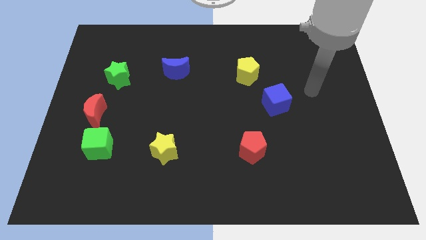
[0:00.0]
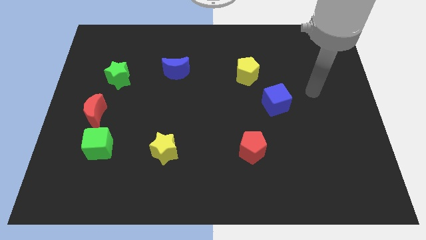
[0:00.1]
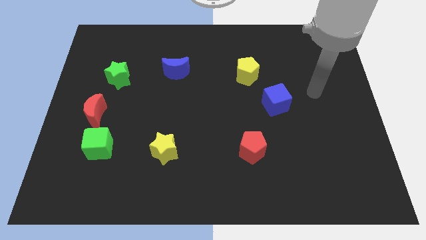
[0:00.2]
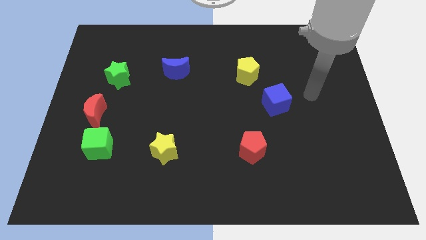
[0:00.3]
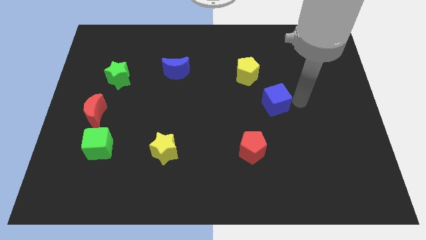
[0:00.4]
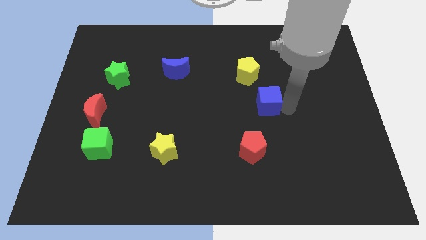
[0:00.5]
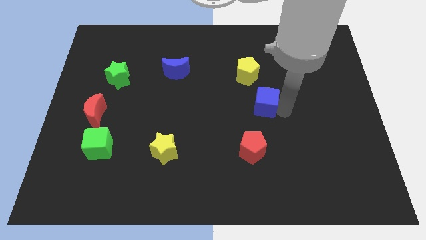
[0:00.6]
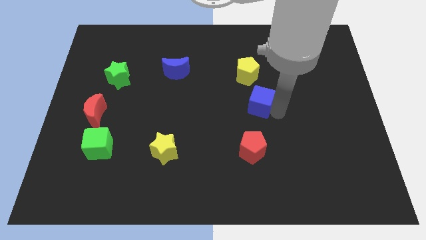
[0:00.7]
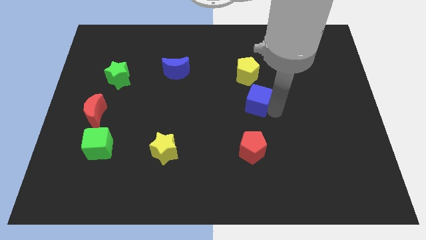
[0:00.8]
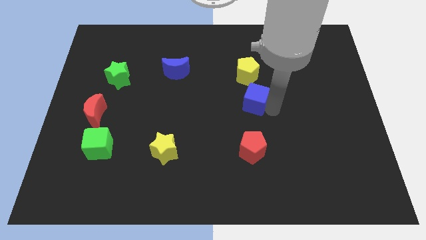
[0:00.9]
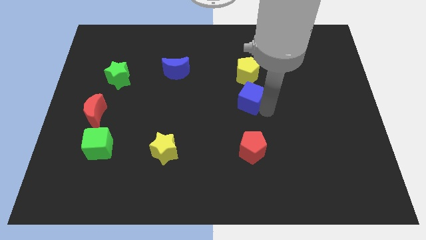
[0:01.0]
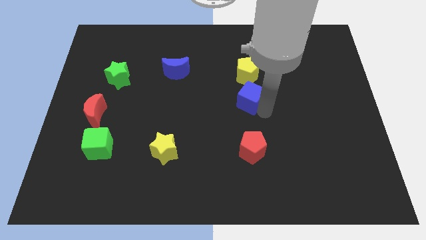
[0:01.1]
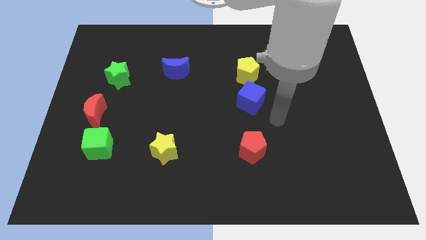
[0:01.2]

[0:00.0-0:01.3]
push blue cube to the bottom of the yellow pentagon

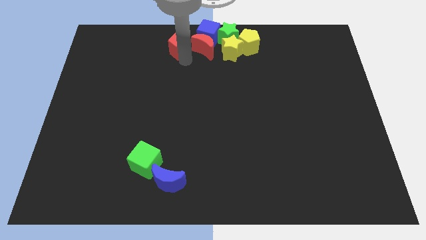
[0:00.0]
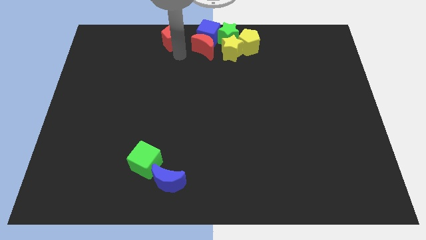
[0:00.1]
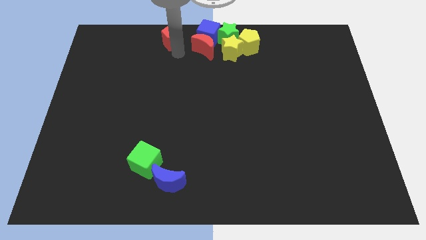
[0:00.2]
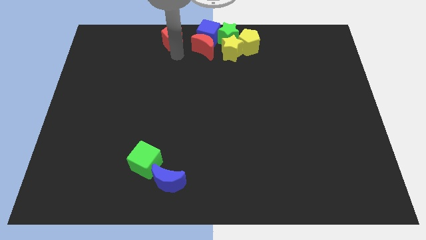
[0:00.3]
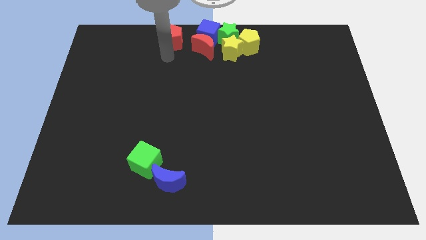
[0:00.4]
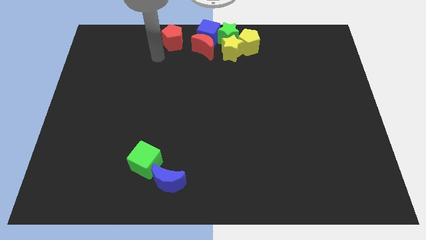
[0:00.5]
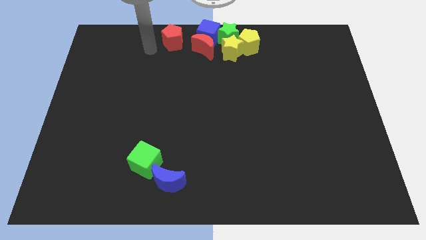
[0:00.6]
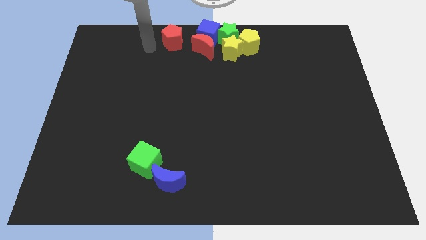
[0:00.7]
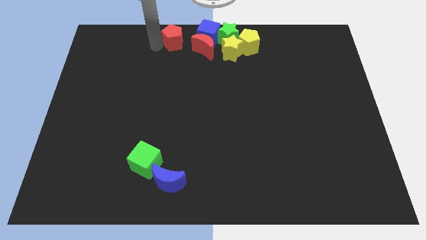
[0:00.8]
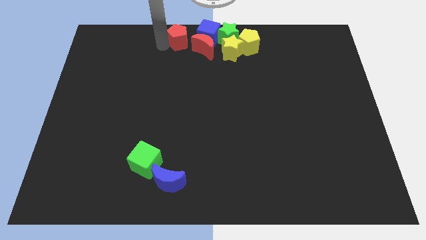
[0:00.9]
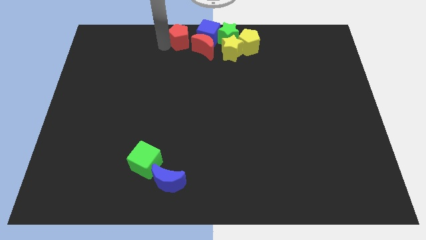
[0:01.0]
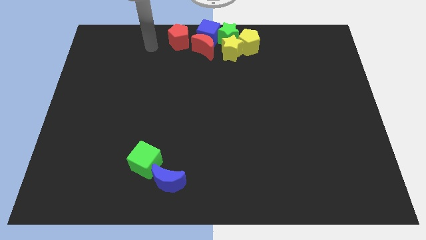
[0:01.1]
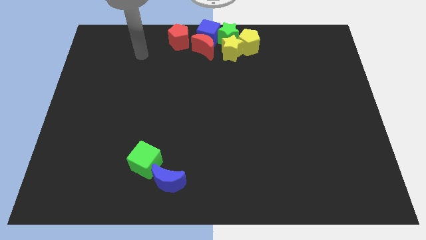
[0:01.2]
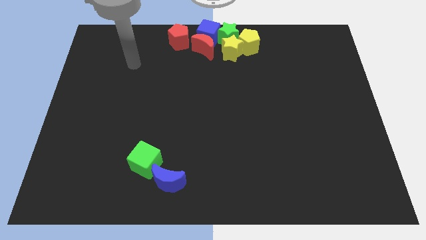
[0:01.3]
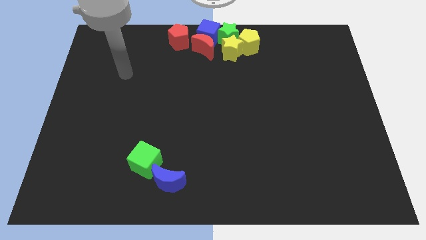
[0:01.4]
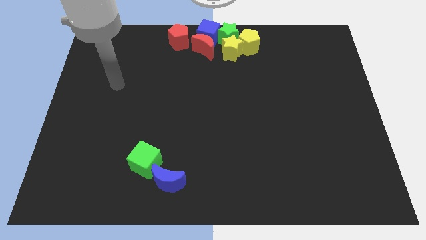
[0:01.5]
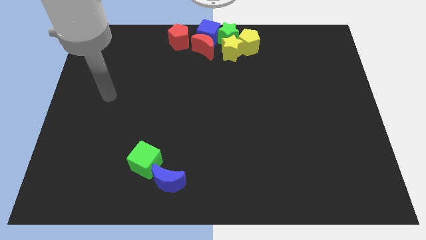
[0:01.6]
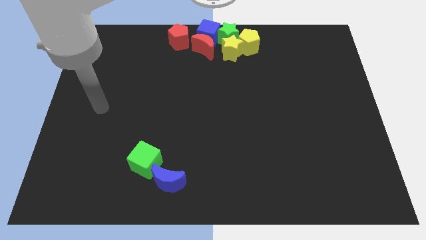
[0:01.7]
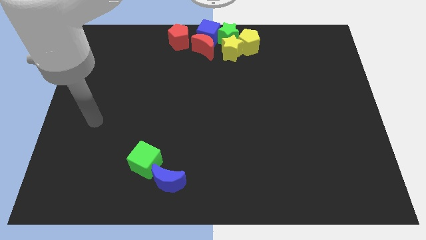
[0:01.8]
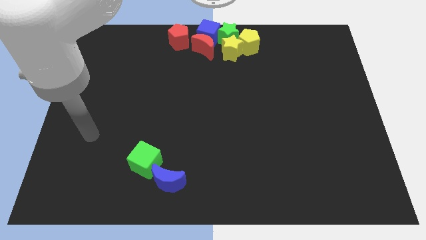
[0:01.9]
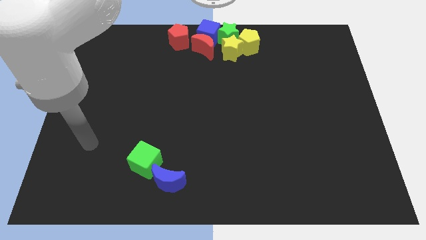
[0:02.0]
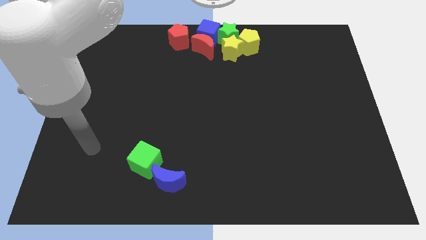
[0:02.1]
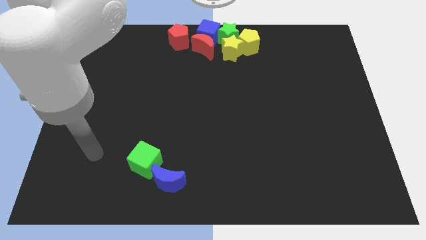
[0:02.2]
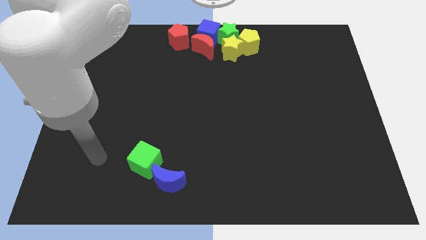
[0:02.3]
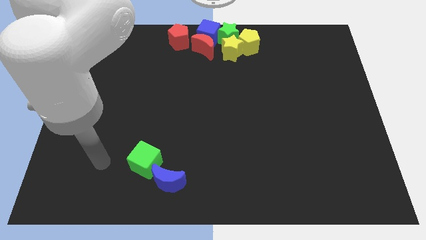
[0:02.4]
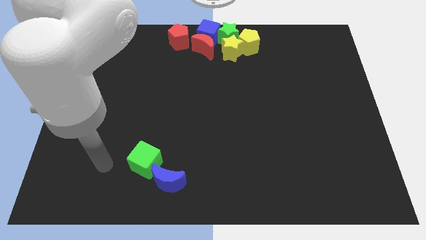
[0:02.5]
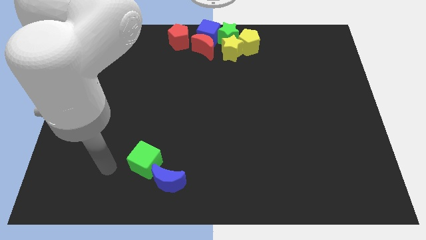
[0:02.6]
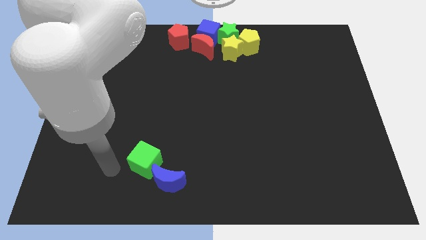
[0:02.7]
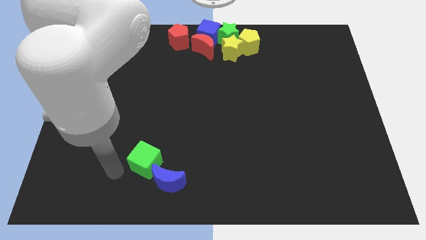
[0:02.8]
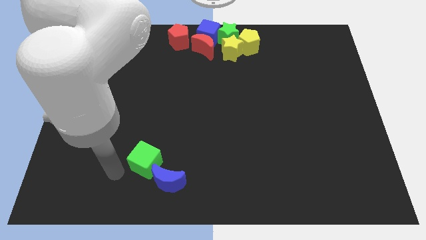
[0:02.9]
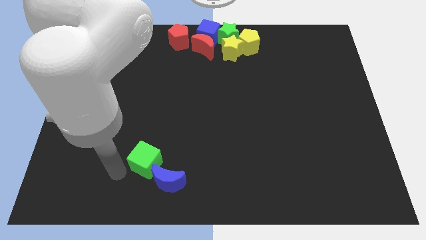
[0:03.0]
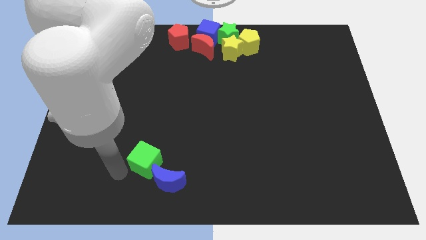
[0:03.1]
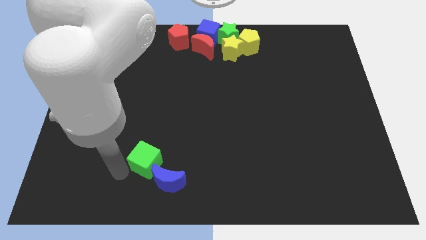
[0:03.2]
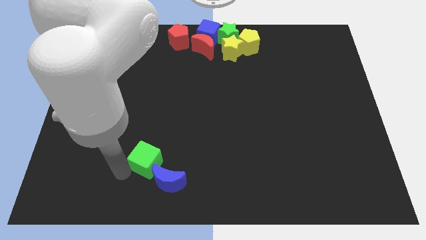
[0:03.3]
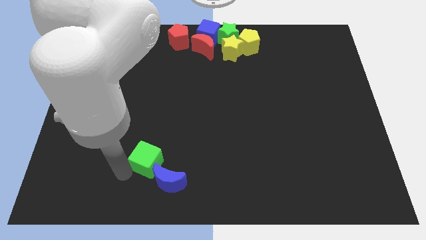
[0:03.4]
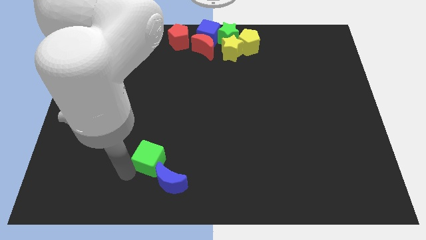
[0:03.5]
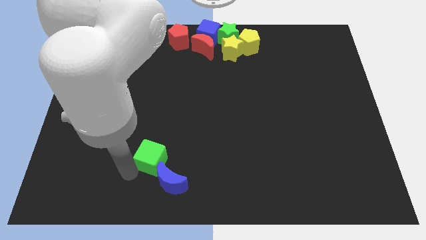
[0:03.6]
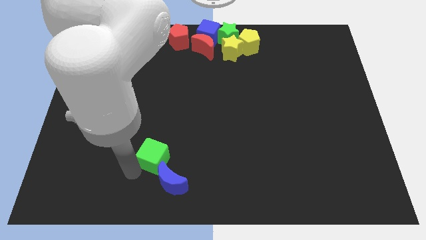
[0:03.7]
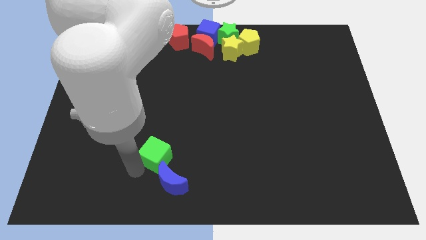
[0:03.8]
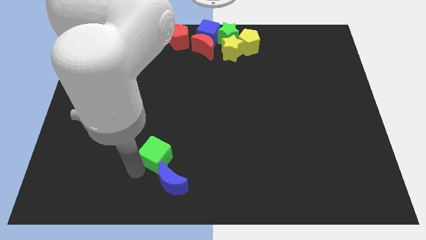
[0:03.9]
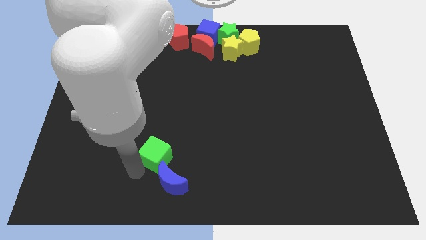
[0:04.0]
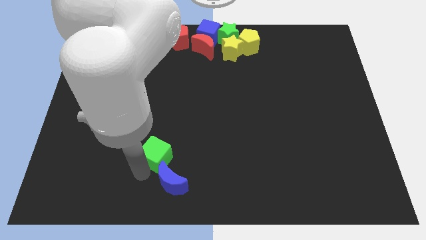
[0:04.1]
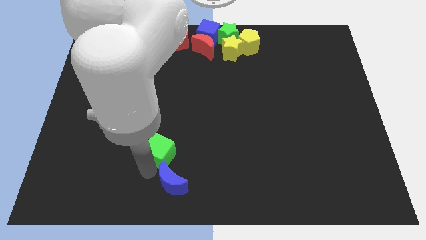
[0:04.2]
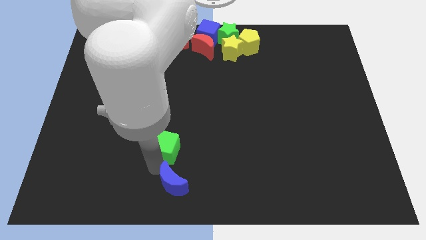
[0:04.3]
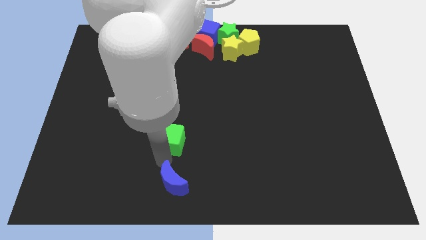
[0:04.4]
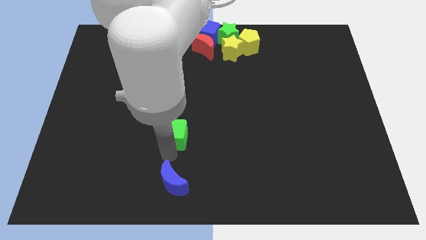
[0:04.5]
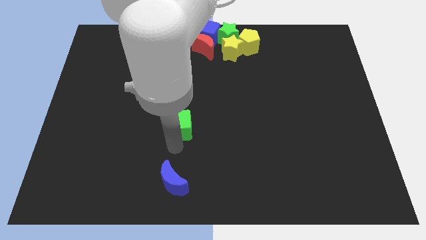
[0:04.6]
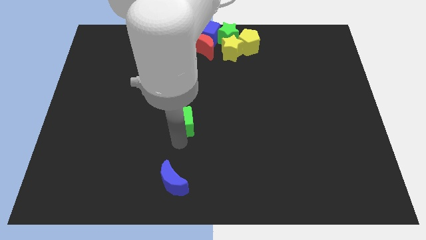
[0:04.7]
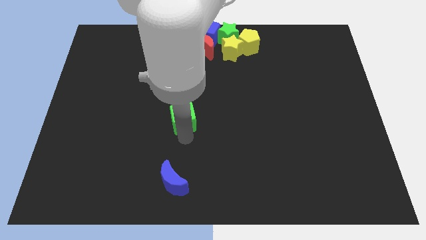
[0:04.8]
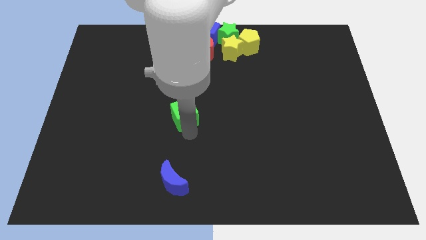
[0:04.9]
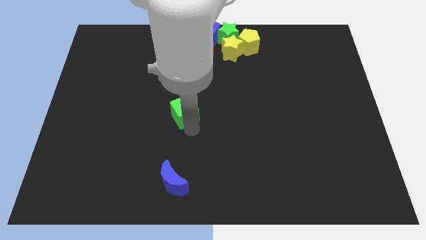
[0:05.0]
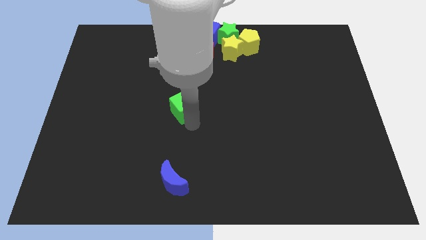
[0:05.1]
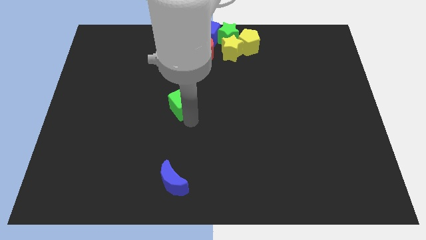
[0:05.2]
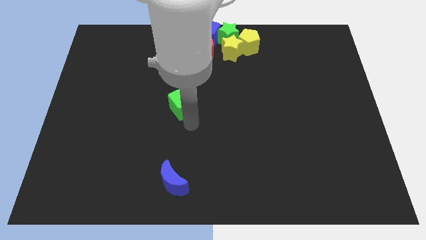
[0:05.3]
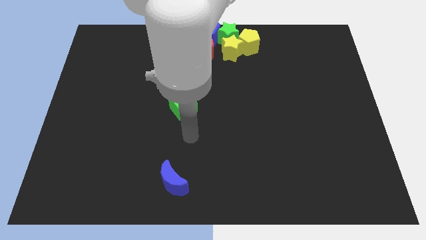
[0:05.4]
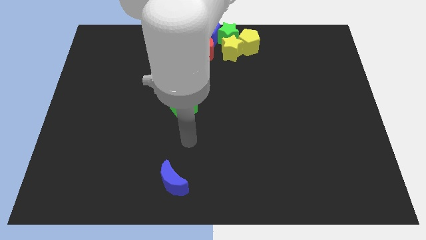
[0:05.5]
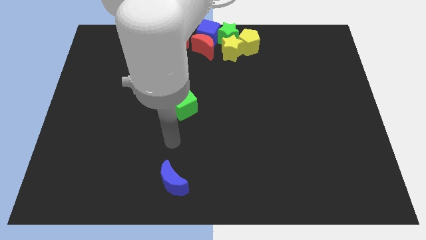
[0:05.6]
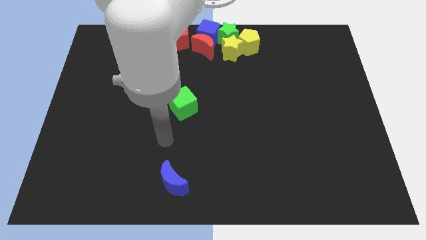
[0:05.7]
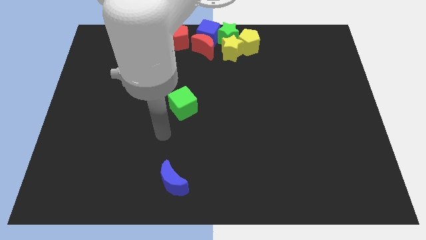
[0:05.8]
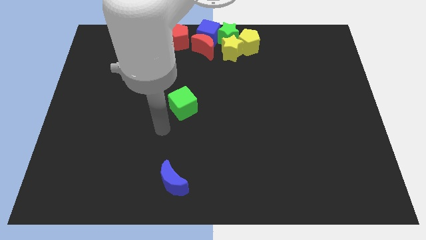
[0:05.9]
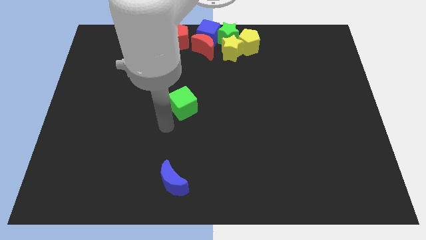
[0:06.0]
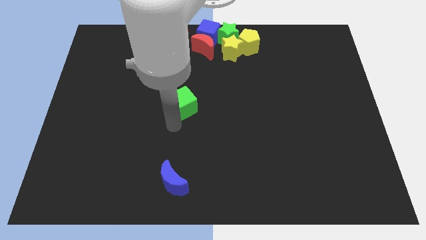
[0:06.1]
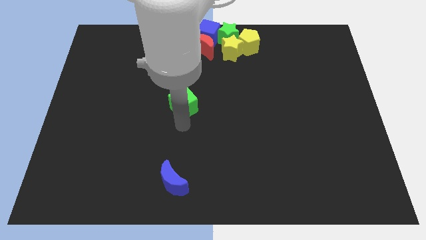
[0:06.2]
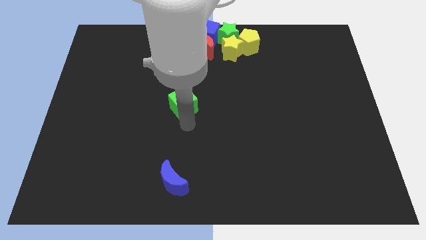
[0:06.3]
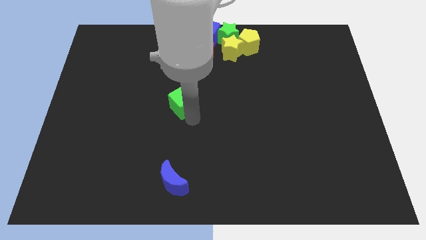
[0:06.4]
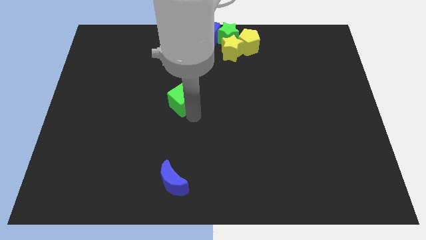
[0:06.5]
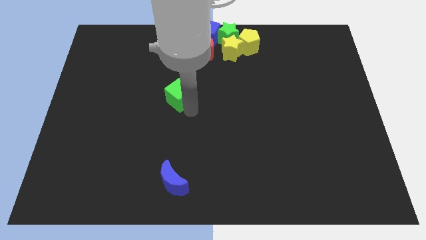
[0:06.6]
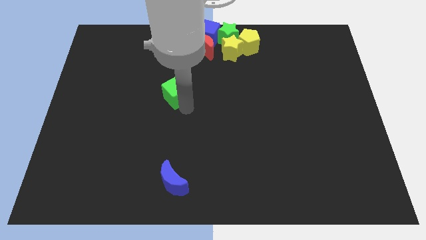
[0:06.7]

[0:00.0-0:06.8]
place the green cube above the blue crescent

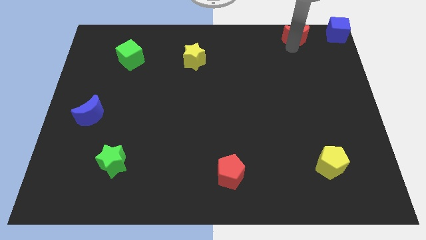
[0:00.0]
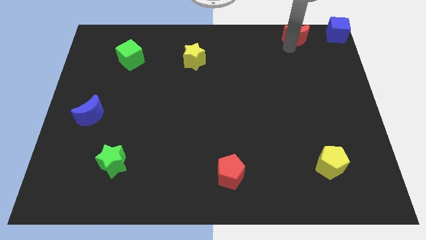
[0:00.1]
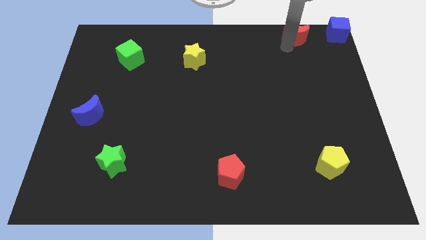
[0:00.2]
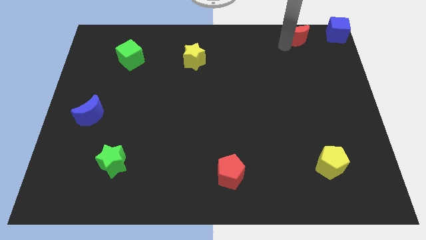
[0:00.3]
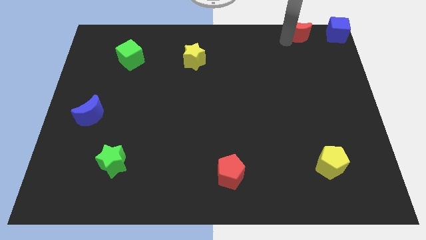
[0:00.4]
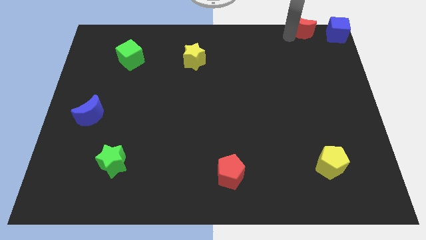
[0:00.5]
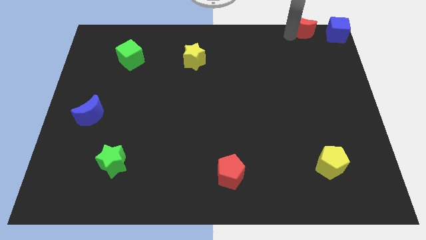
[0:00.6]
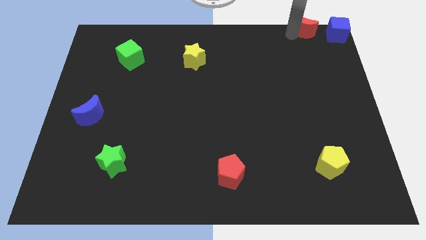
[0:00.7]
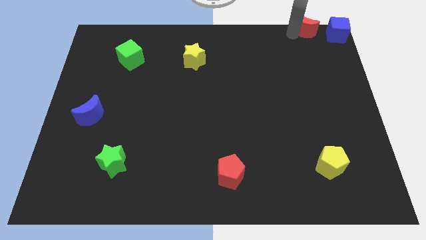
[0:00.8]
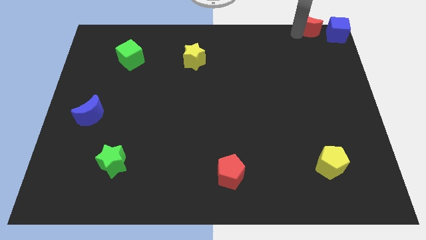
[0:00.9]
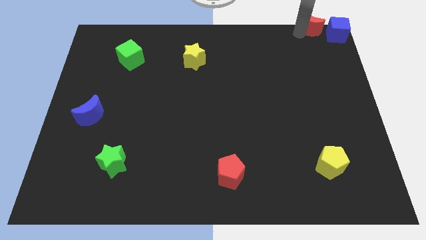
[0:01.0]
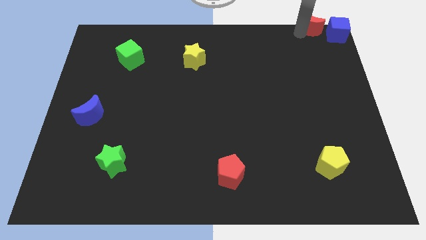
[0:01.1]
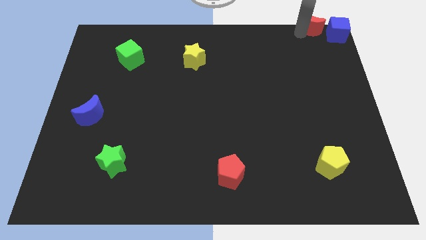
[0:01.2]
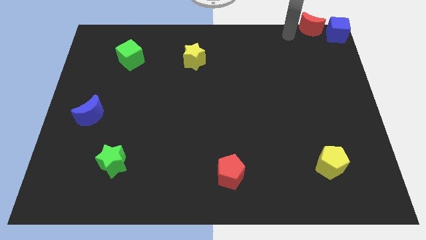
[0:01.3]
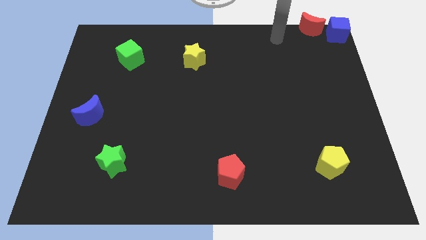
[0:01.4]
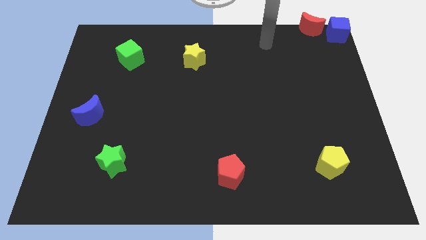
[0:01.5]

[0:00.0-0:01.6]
move the red moon to the left of the blue cube
